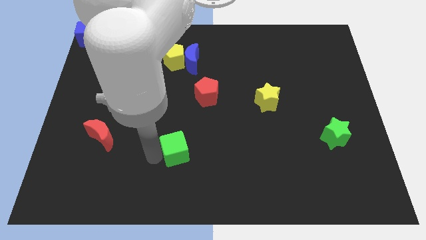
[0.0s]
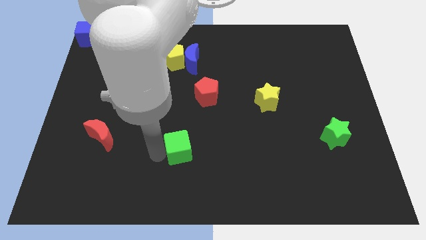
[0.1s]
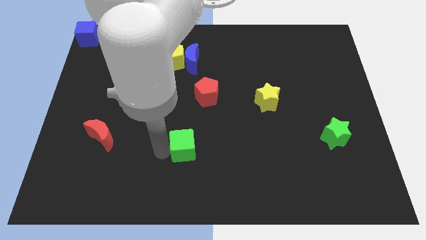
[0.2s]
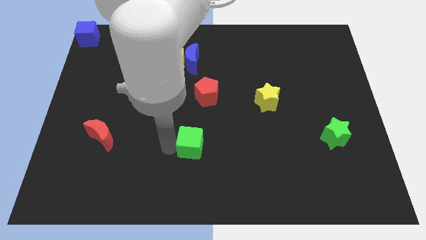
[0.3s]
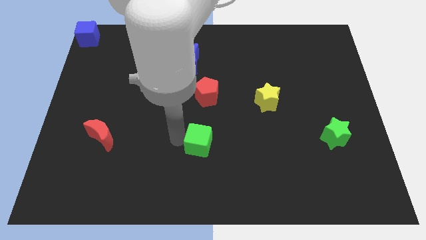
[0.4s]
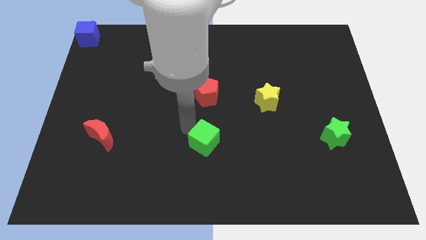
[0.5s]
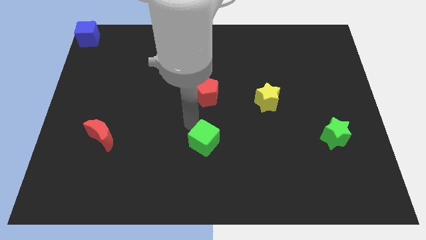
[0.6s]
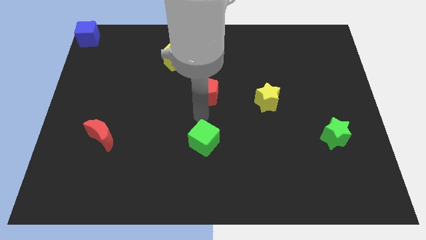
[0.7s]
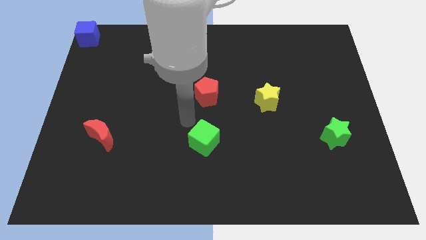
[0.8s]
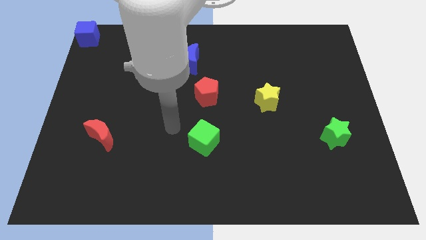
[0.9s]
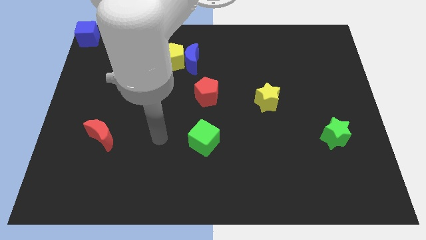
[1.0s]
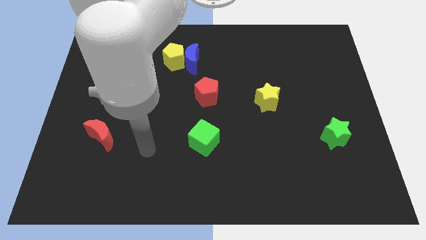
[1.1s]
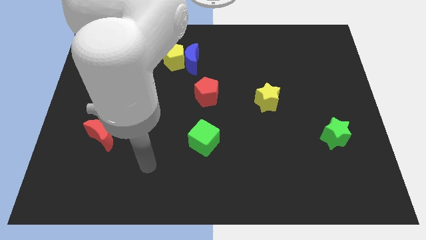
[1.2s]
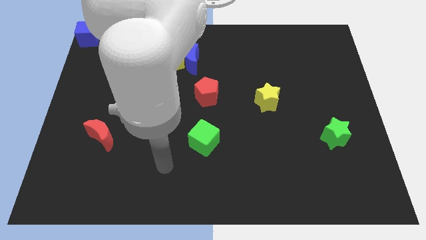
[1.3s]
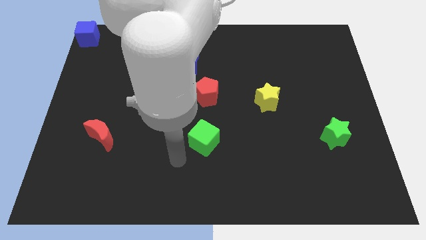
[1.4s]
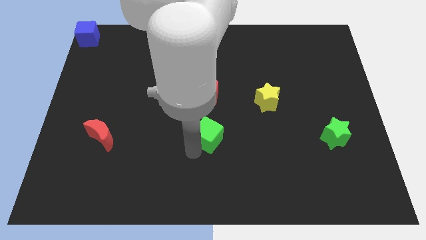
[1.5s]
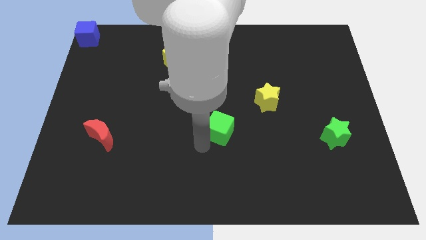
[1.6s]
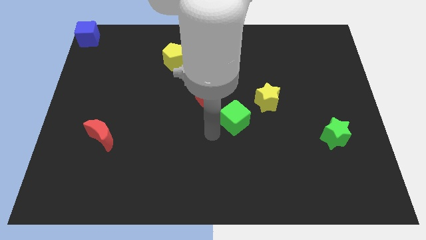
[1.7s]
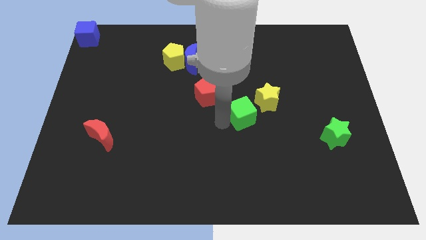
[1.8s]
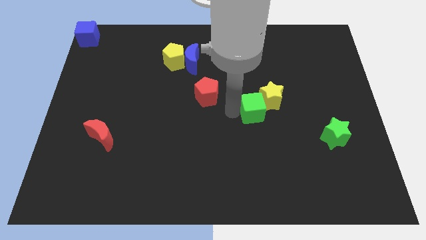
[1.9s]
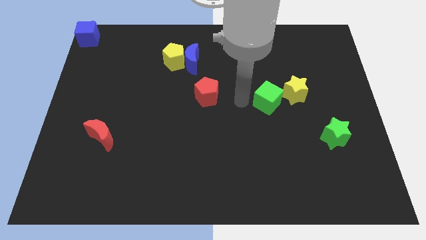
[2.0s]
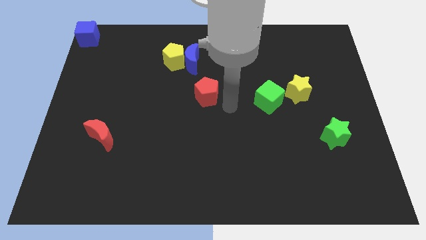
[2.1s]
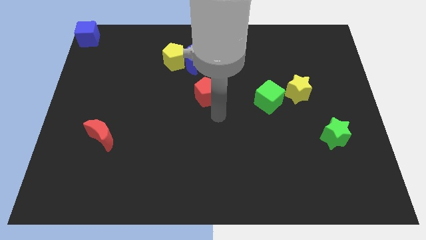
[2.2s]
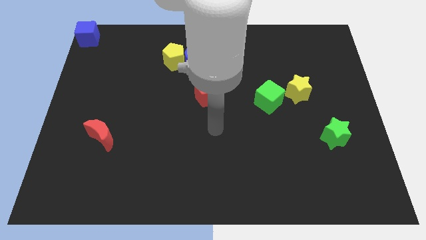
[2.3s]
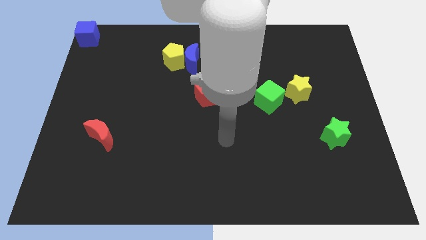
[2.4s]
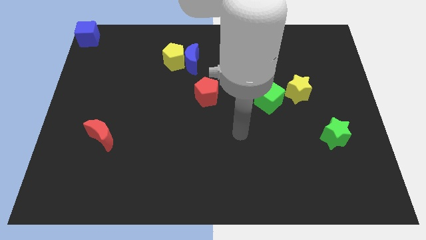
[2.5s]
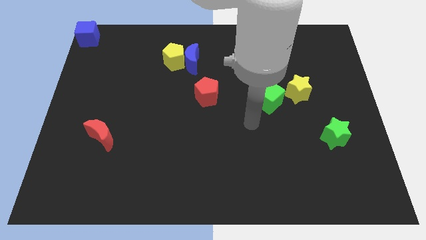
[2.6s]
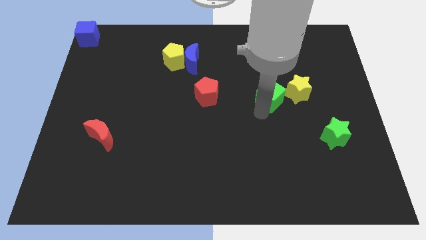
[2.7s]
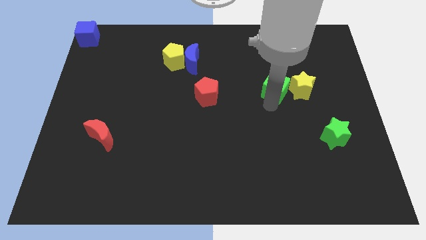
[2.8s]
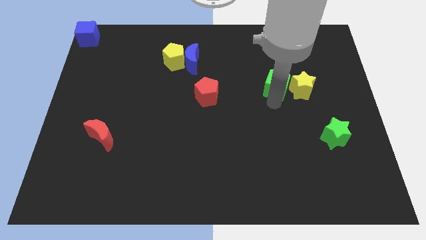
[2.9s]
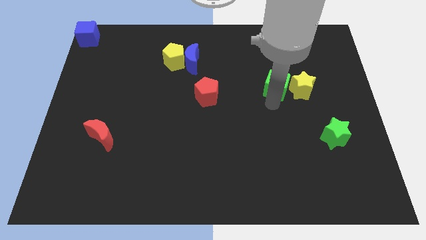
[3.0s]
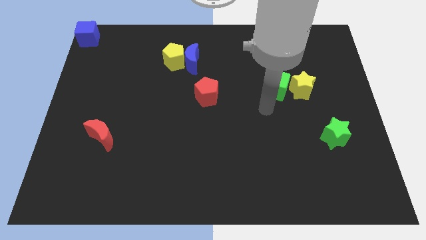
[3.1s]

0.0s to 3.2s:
put the green cube left to the yellow star

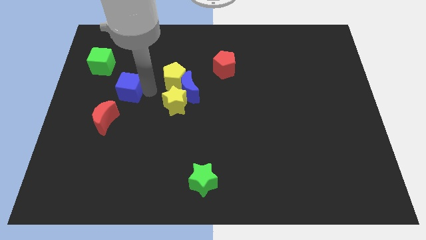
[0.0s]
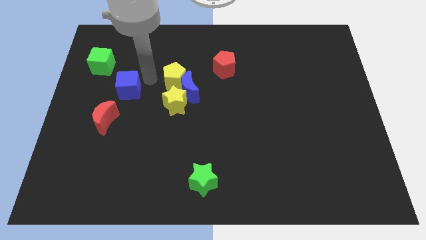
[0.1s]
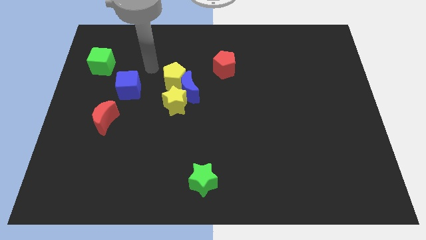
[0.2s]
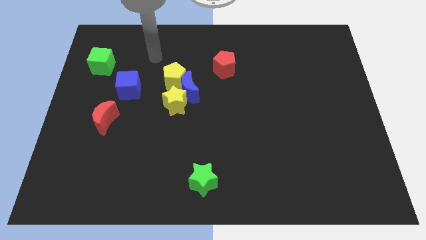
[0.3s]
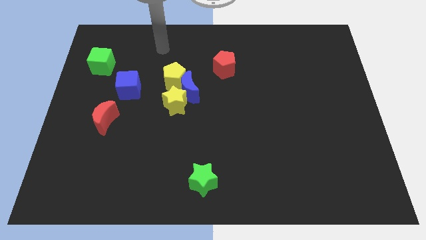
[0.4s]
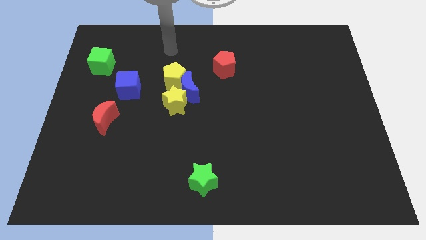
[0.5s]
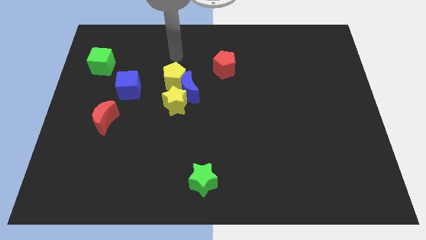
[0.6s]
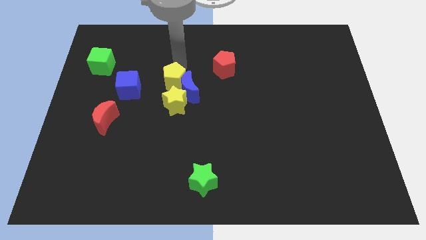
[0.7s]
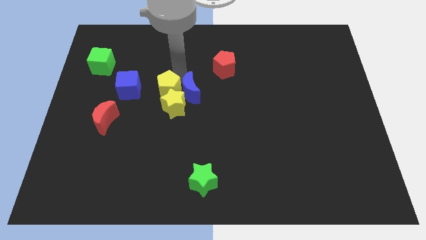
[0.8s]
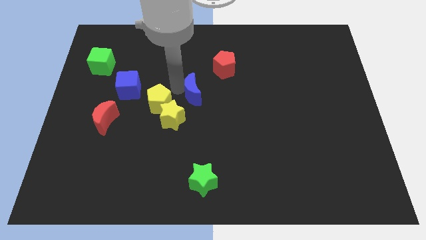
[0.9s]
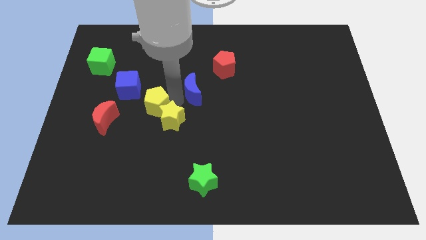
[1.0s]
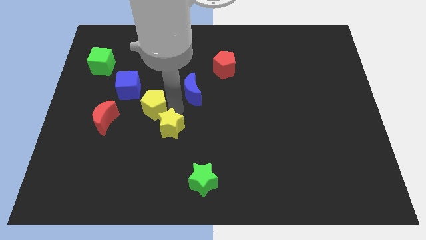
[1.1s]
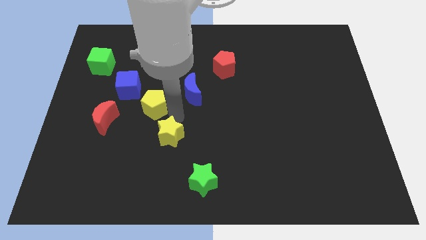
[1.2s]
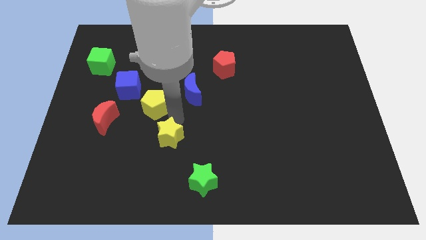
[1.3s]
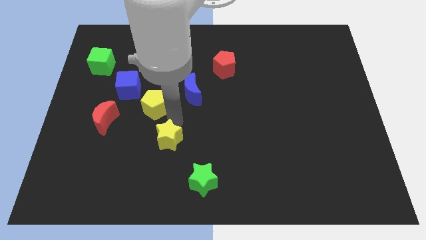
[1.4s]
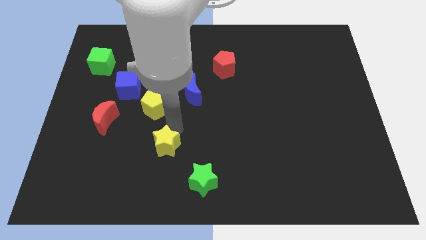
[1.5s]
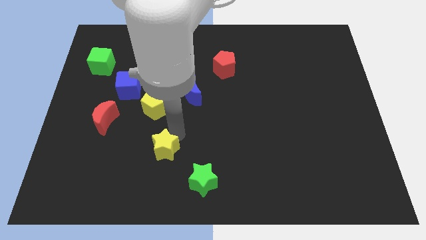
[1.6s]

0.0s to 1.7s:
push yellow star downwards

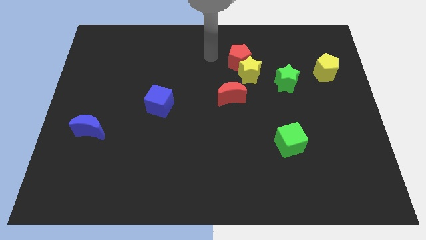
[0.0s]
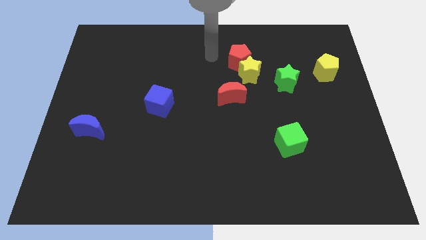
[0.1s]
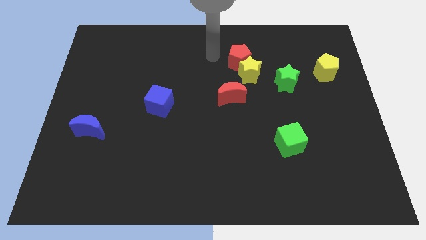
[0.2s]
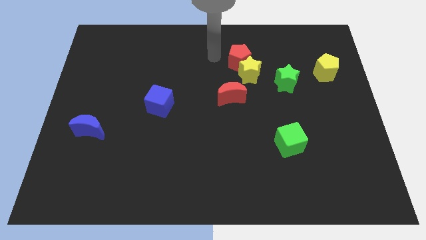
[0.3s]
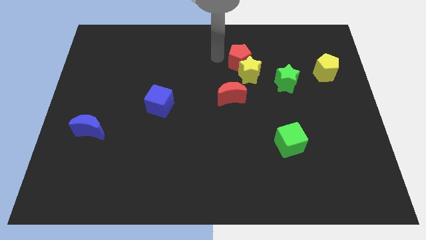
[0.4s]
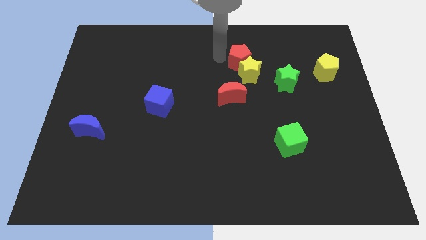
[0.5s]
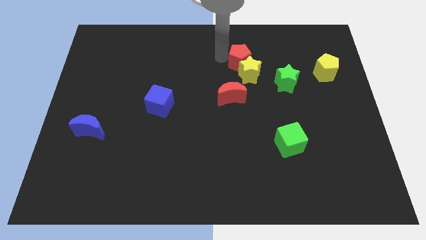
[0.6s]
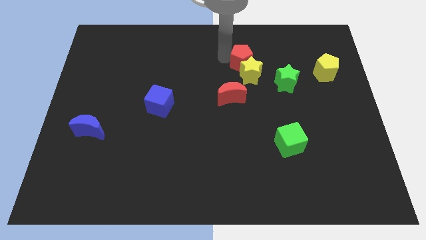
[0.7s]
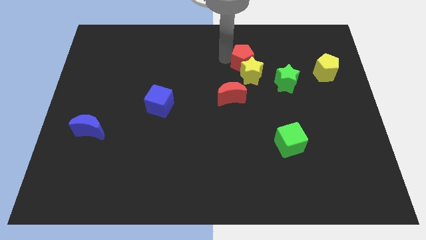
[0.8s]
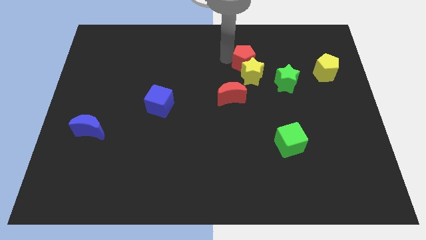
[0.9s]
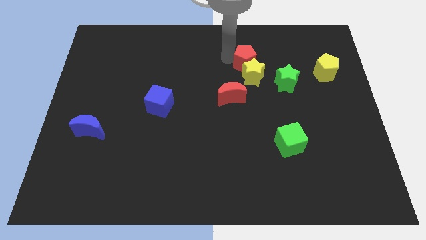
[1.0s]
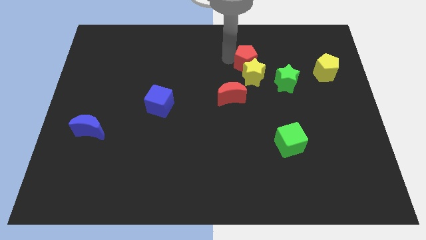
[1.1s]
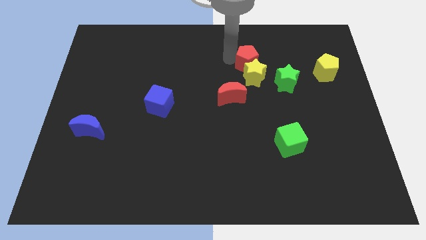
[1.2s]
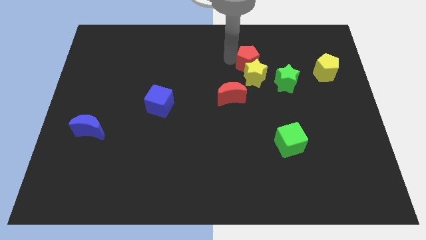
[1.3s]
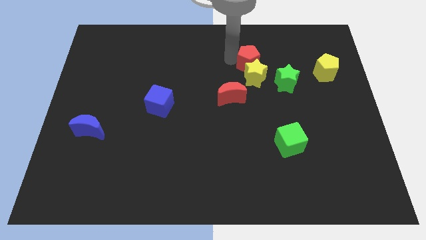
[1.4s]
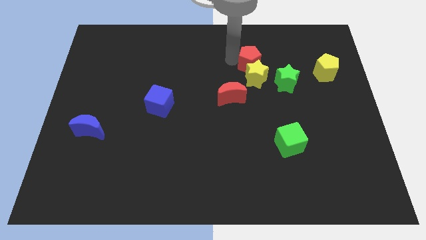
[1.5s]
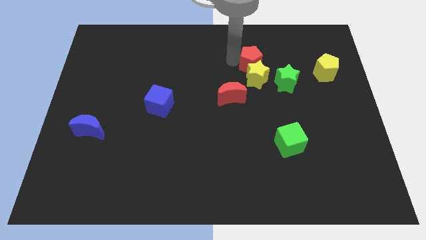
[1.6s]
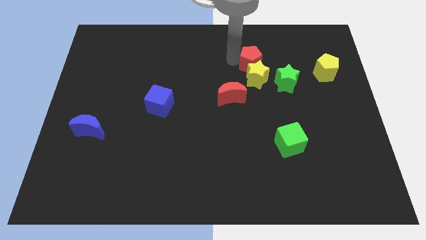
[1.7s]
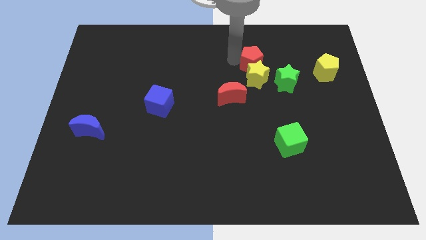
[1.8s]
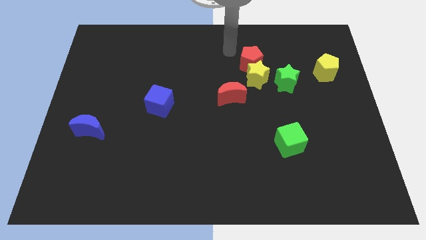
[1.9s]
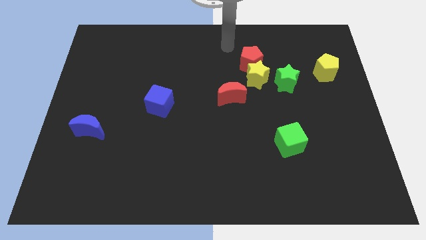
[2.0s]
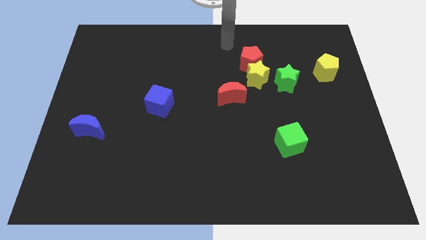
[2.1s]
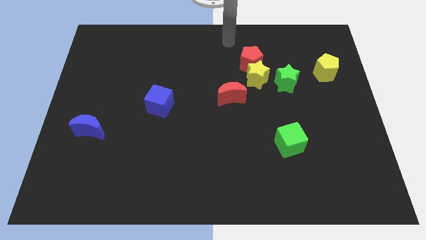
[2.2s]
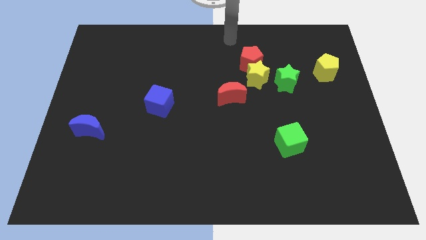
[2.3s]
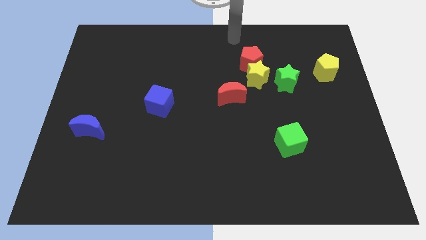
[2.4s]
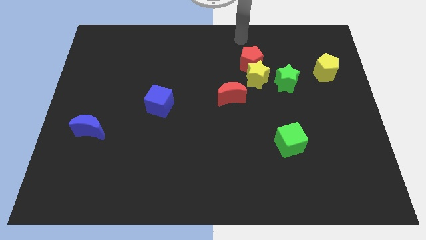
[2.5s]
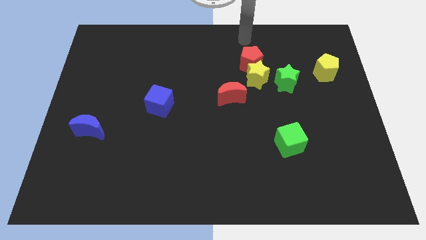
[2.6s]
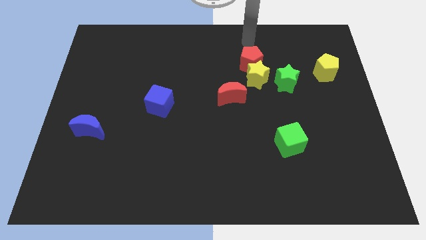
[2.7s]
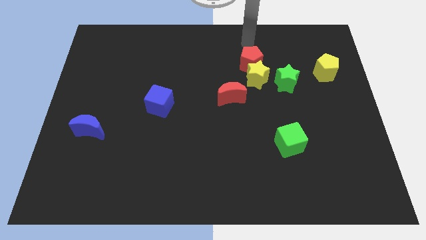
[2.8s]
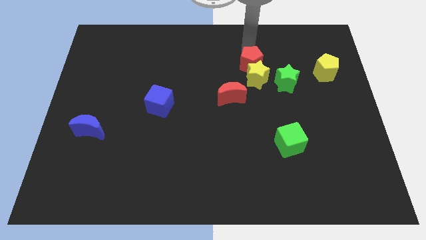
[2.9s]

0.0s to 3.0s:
move the red pentagon above the yellow star

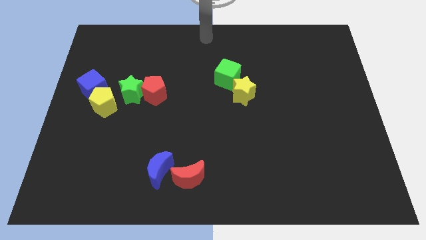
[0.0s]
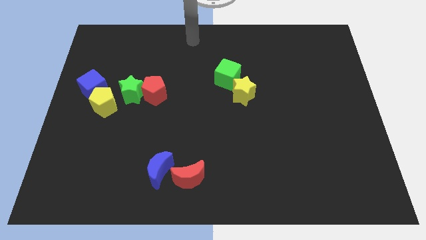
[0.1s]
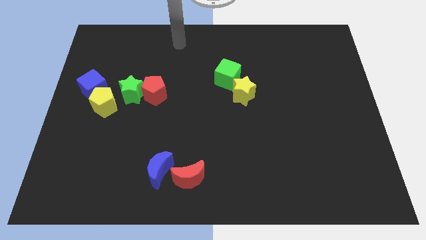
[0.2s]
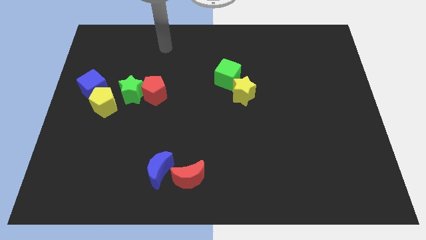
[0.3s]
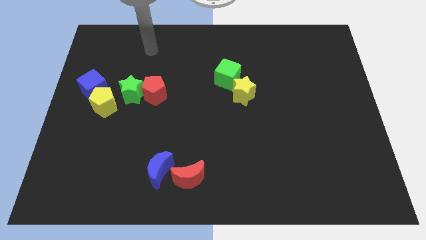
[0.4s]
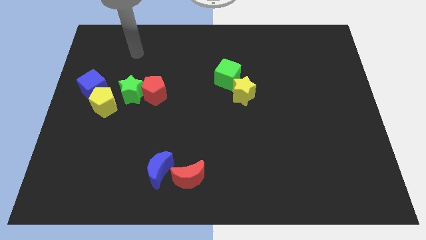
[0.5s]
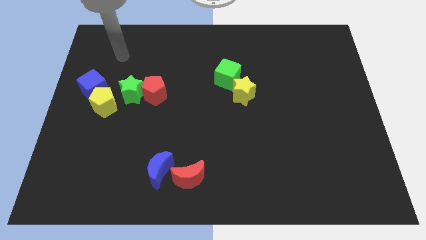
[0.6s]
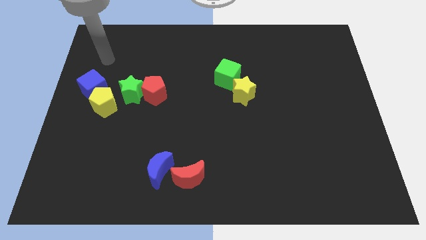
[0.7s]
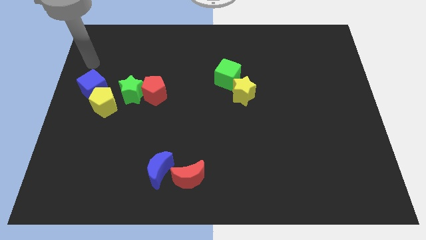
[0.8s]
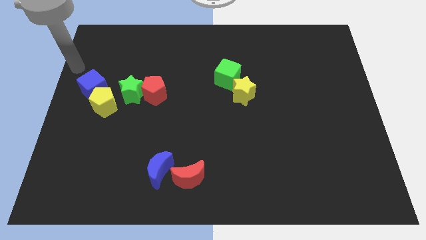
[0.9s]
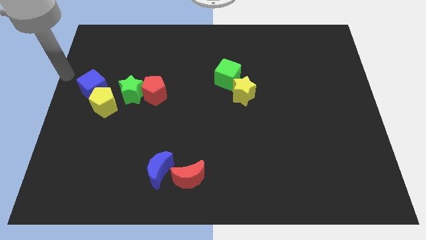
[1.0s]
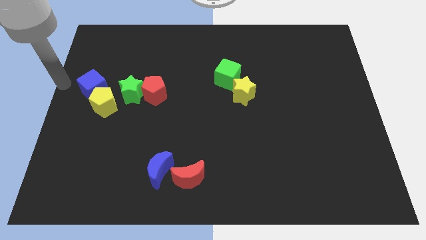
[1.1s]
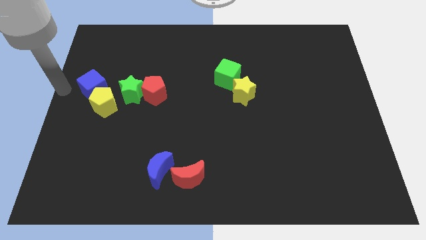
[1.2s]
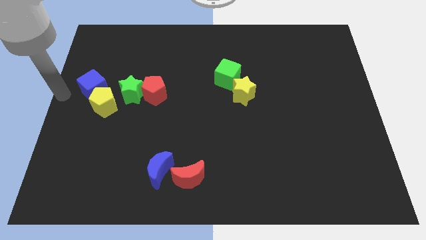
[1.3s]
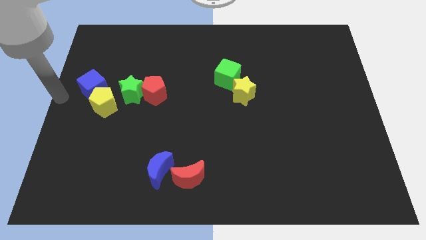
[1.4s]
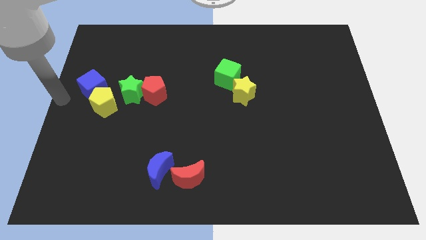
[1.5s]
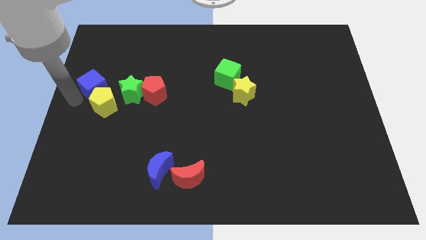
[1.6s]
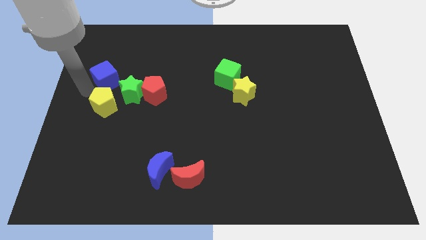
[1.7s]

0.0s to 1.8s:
place the blue cube at the top side of the yellow pentagon
